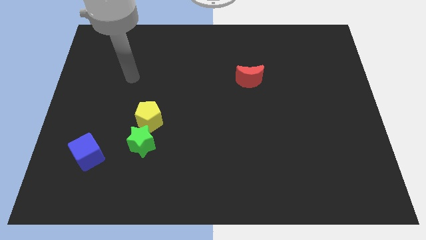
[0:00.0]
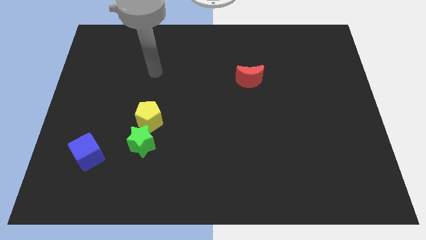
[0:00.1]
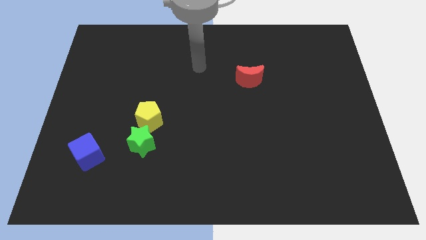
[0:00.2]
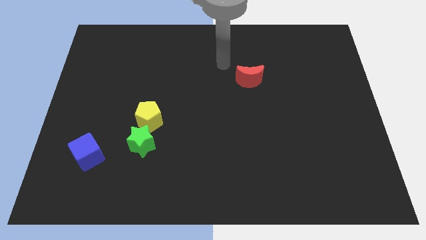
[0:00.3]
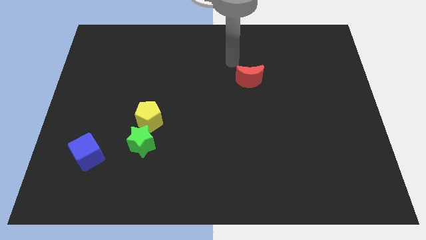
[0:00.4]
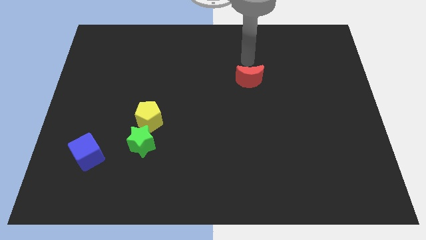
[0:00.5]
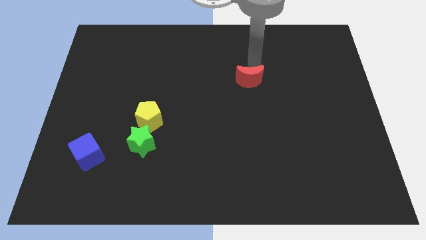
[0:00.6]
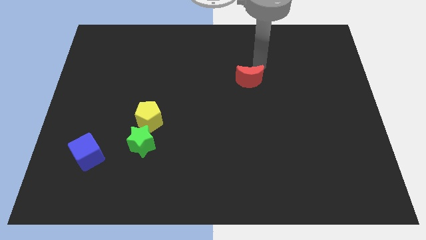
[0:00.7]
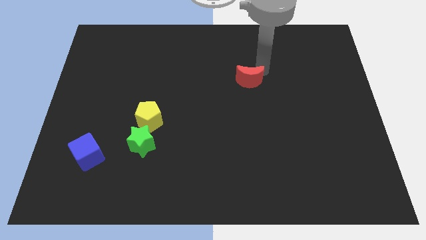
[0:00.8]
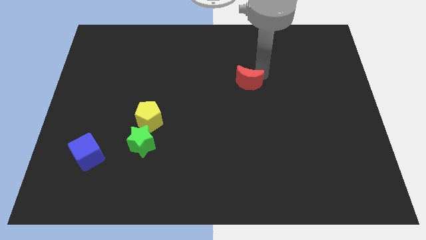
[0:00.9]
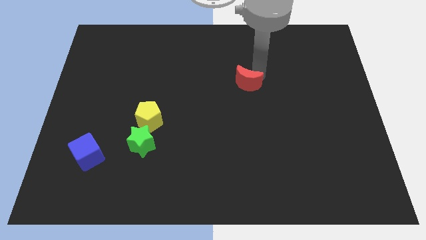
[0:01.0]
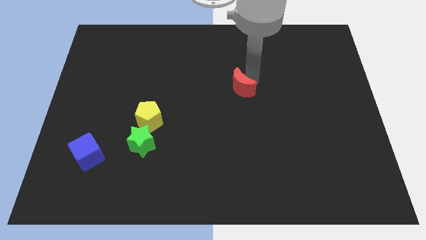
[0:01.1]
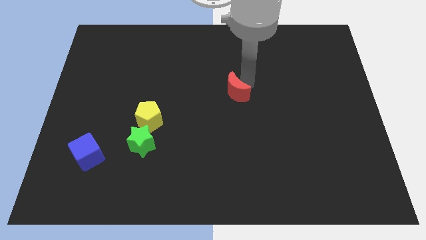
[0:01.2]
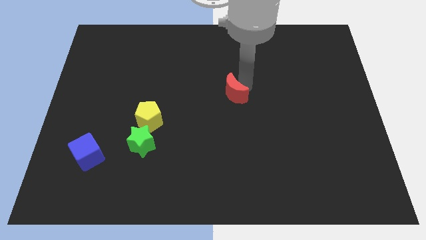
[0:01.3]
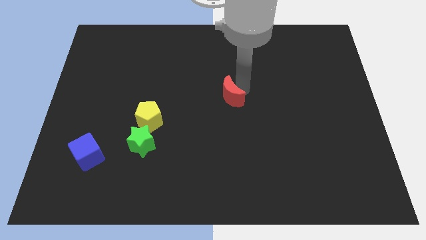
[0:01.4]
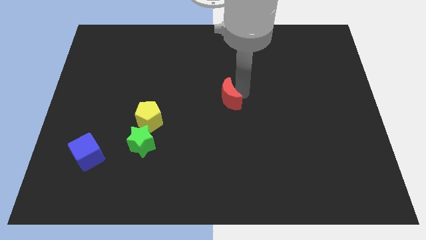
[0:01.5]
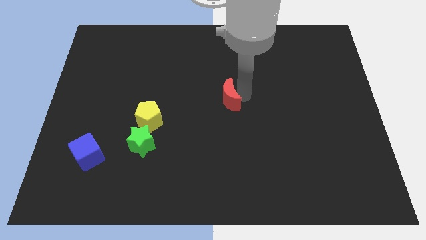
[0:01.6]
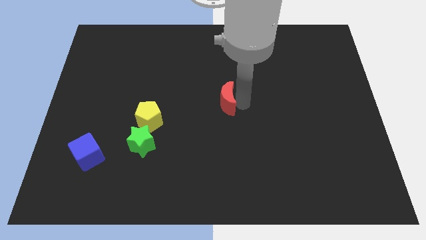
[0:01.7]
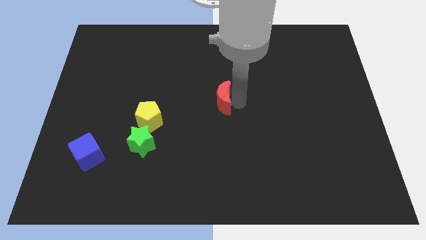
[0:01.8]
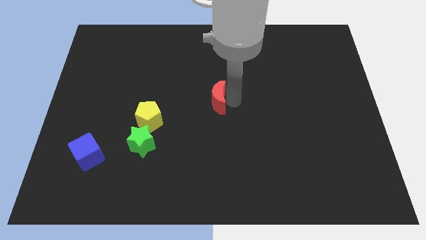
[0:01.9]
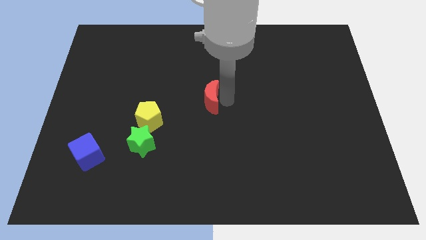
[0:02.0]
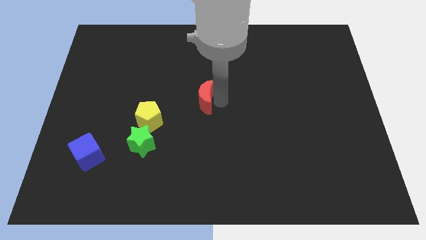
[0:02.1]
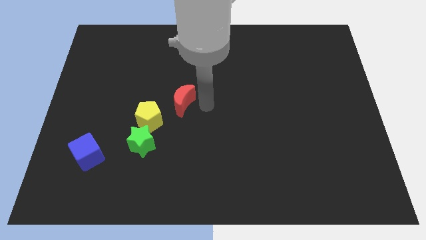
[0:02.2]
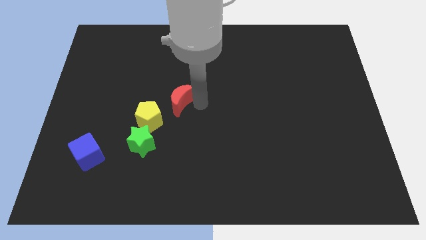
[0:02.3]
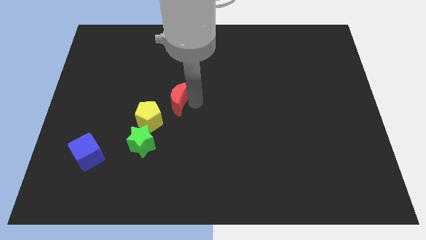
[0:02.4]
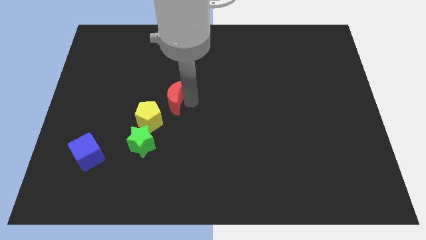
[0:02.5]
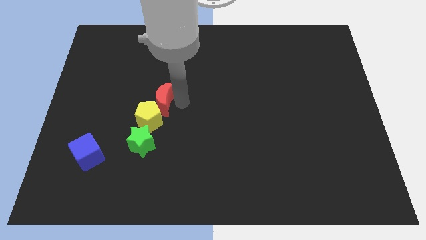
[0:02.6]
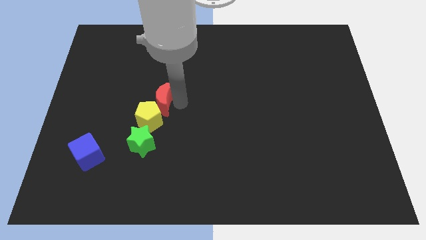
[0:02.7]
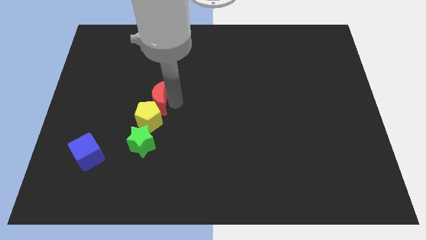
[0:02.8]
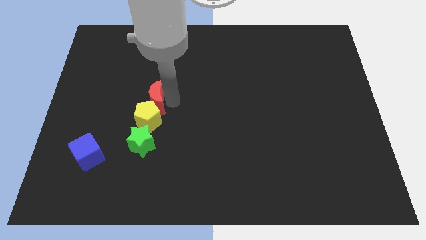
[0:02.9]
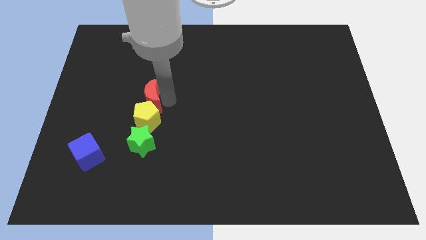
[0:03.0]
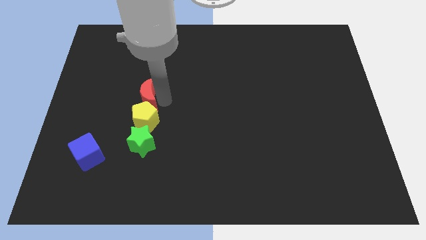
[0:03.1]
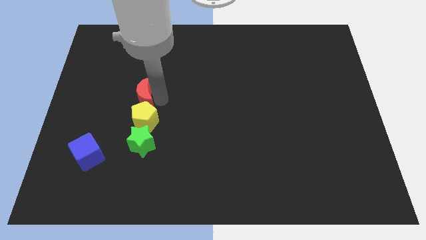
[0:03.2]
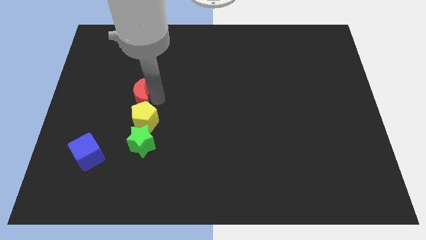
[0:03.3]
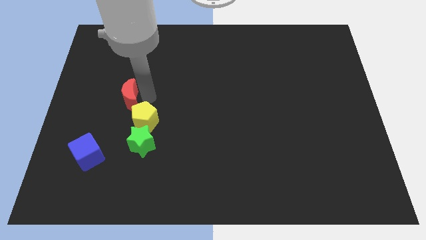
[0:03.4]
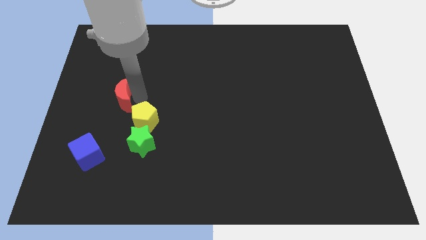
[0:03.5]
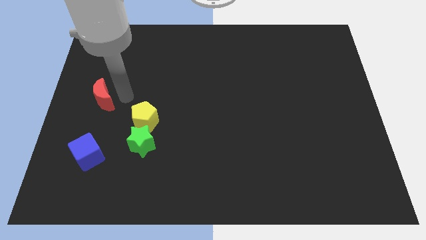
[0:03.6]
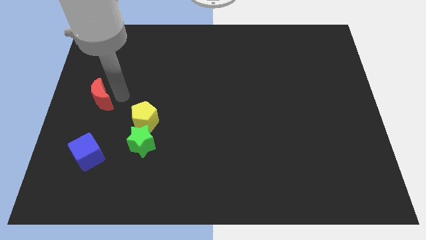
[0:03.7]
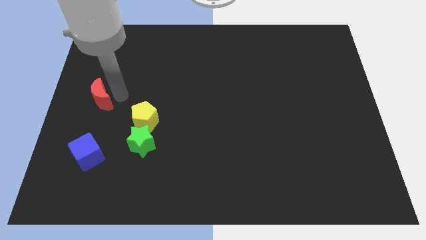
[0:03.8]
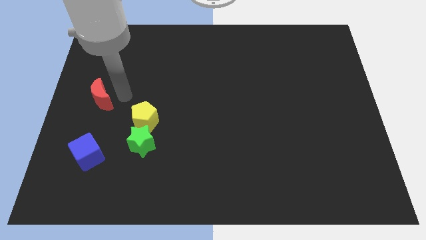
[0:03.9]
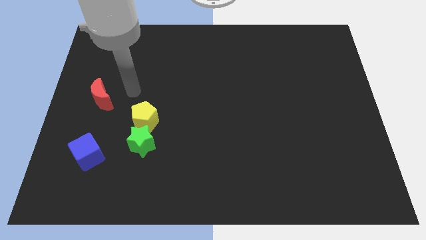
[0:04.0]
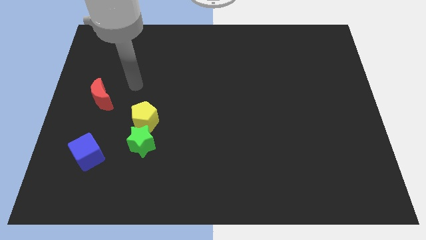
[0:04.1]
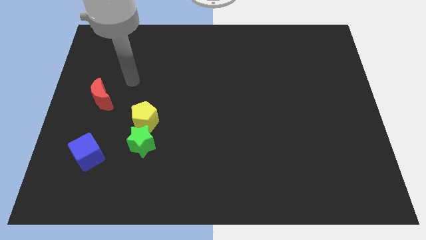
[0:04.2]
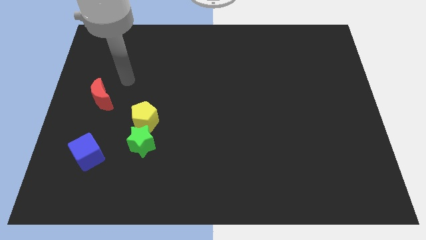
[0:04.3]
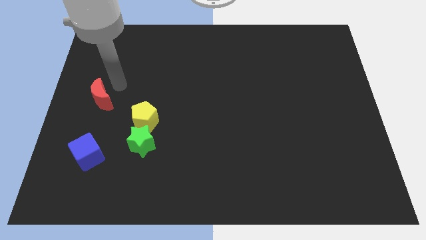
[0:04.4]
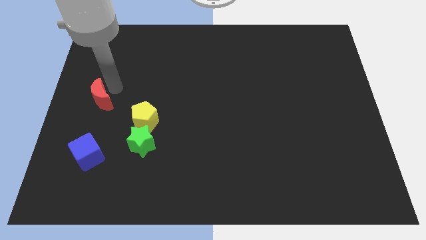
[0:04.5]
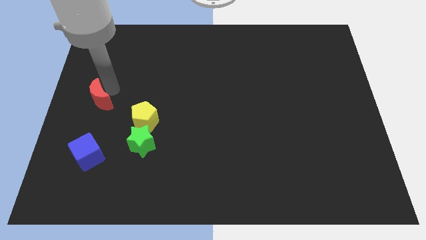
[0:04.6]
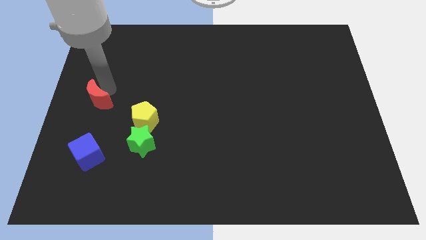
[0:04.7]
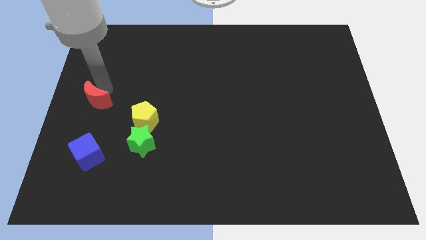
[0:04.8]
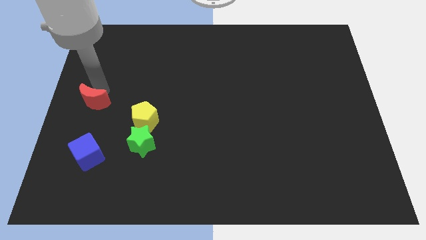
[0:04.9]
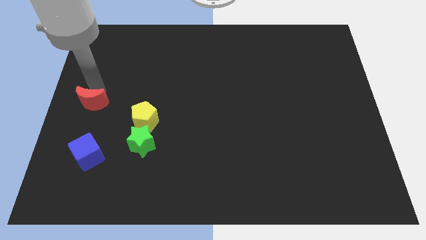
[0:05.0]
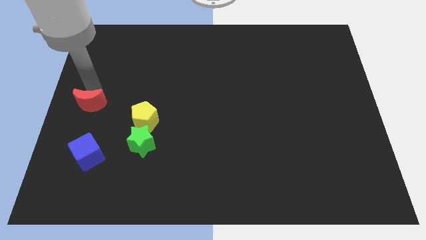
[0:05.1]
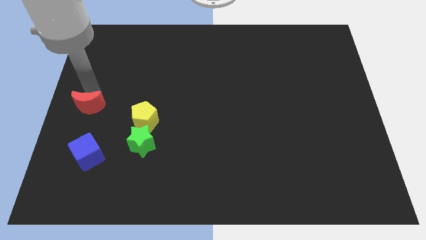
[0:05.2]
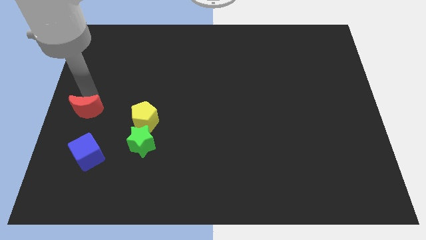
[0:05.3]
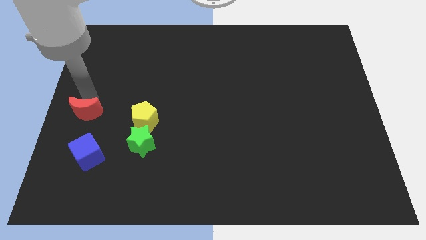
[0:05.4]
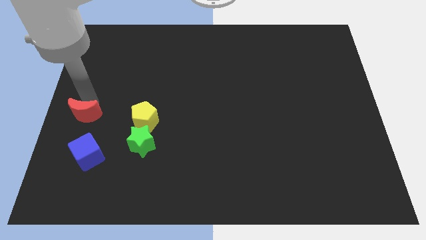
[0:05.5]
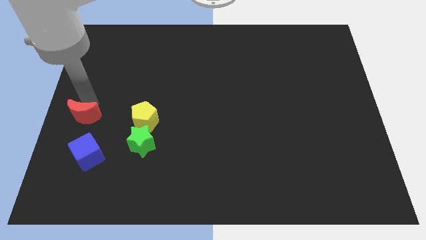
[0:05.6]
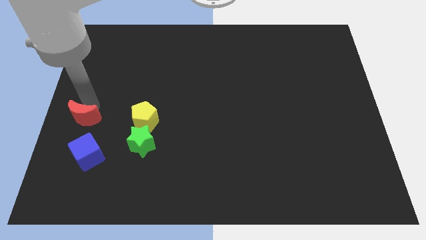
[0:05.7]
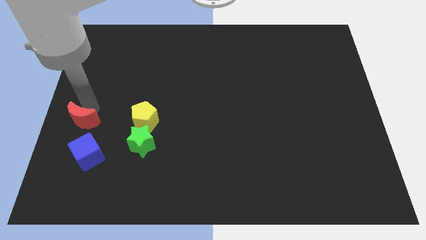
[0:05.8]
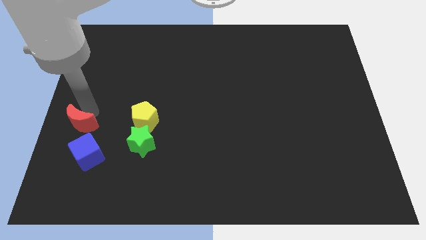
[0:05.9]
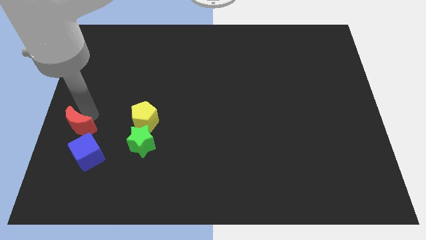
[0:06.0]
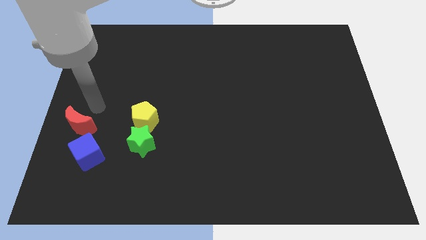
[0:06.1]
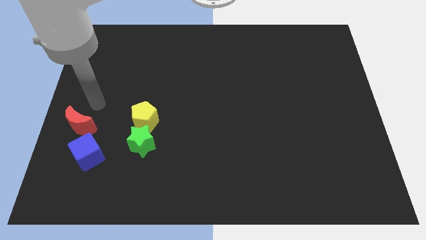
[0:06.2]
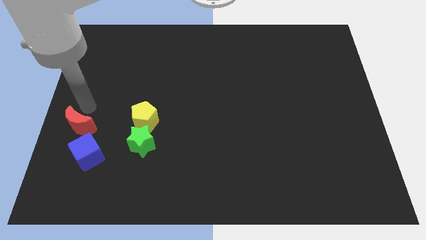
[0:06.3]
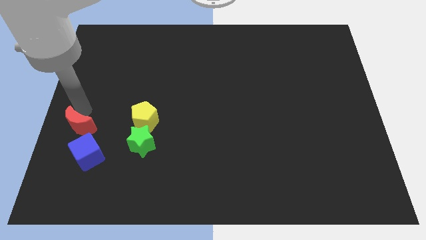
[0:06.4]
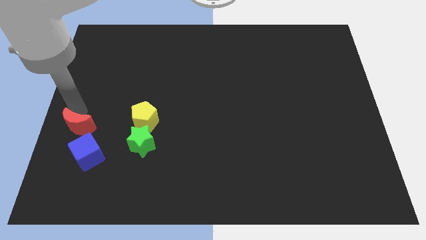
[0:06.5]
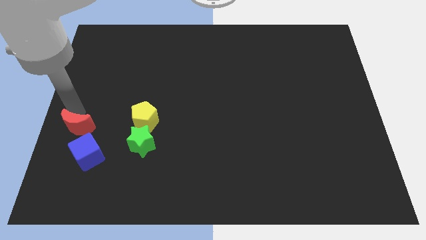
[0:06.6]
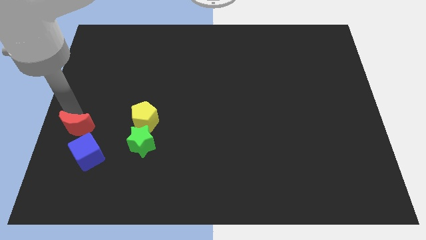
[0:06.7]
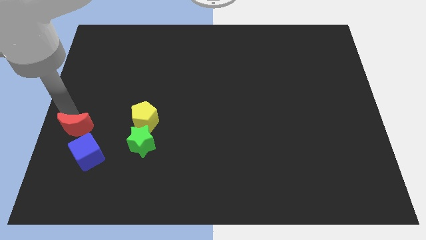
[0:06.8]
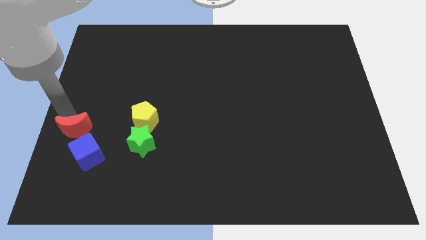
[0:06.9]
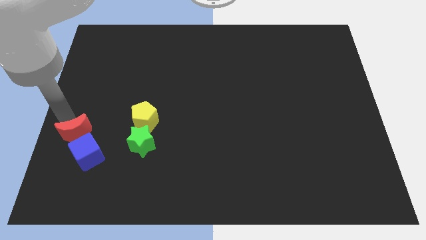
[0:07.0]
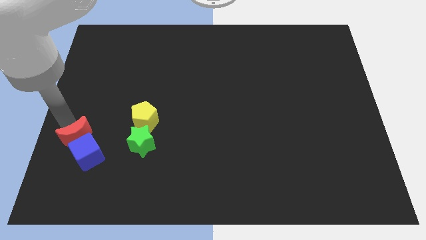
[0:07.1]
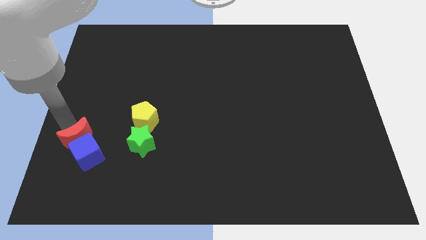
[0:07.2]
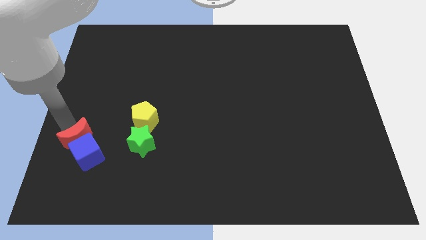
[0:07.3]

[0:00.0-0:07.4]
move the red block towards the blue block

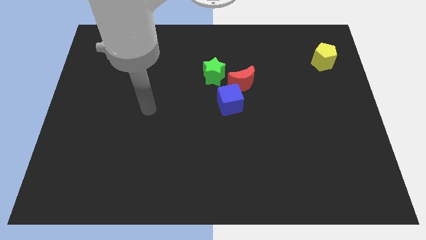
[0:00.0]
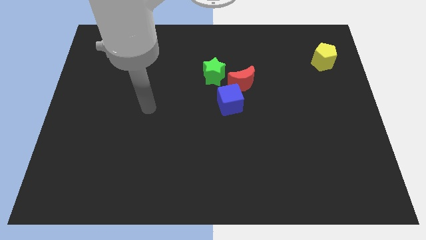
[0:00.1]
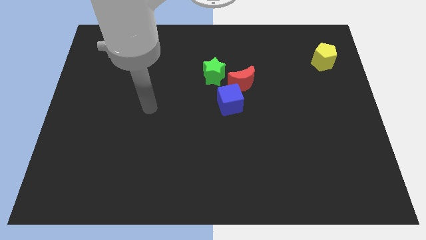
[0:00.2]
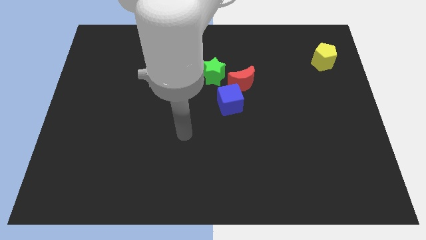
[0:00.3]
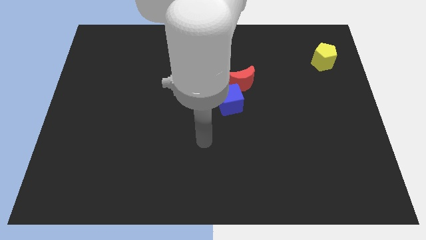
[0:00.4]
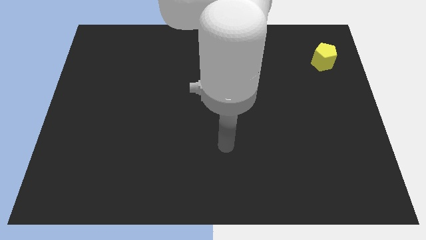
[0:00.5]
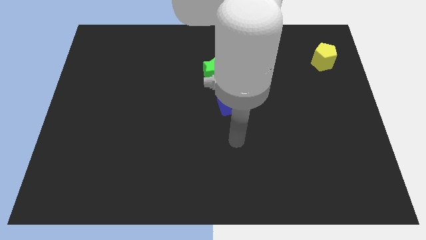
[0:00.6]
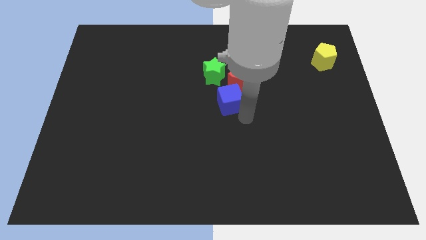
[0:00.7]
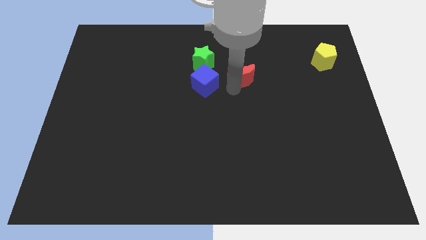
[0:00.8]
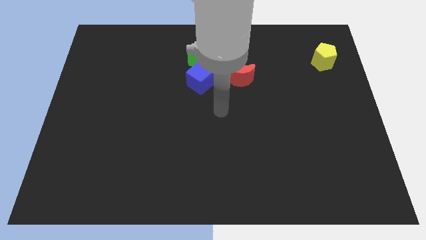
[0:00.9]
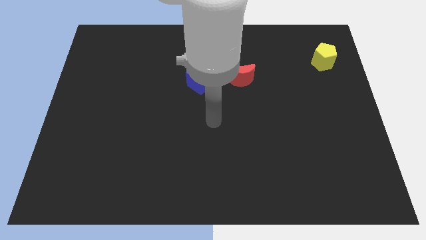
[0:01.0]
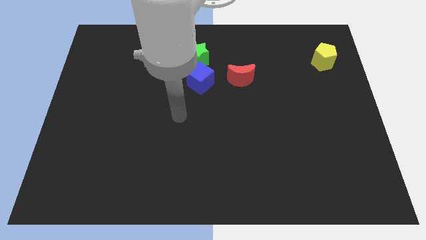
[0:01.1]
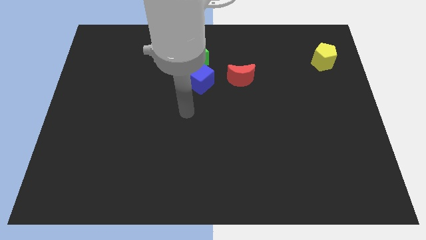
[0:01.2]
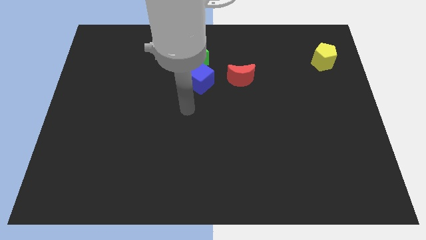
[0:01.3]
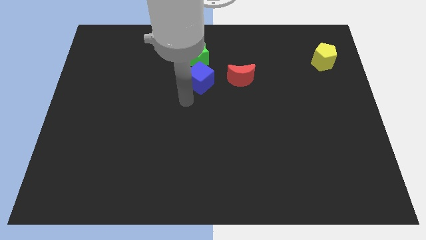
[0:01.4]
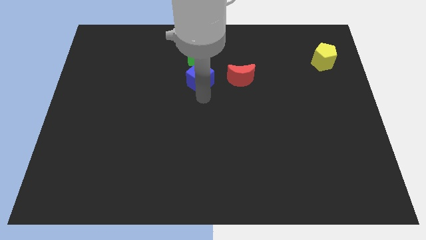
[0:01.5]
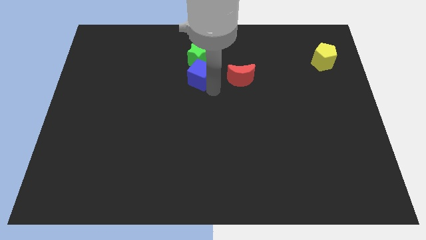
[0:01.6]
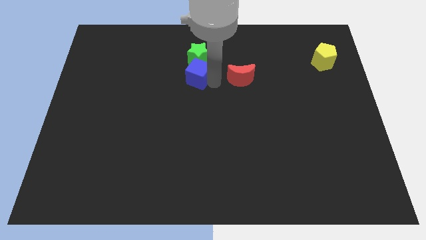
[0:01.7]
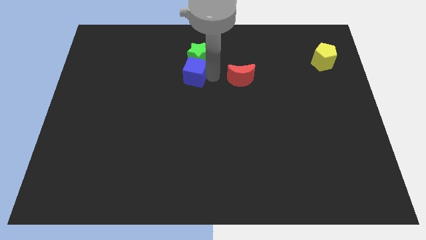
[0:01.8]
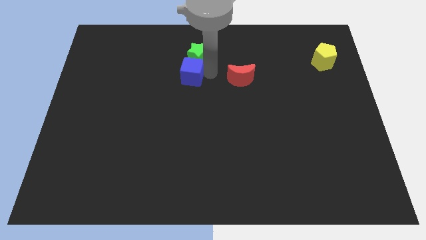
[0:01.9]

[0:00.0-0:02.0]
put the blue cube towards the star
